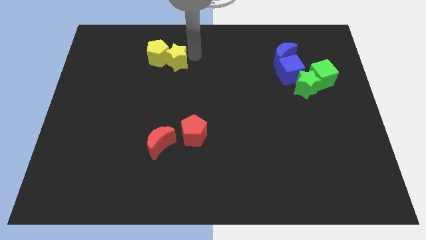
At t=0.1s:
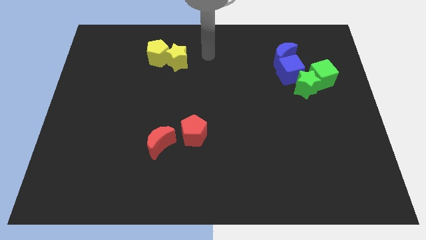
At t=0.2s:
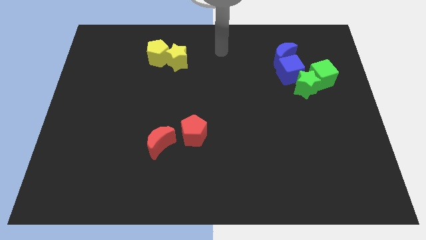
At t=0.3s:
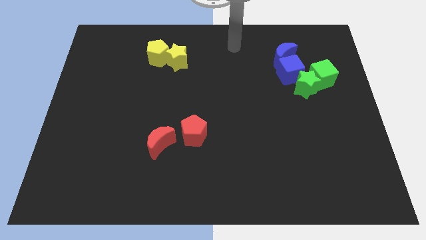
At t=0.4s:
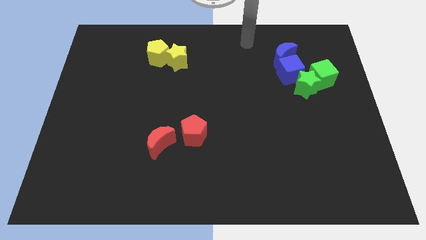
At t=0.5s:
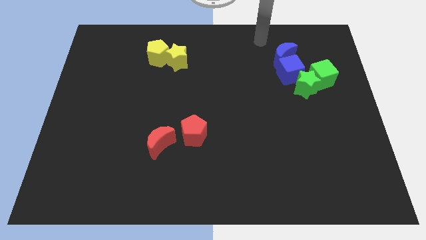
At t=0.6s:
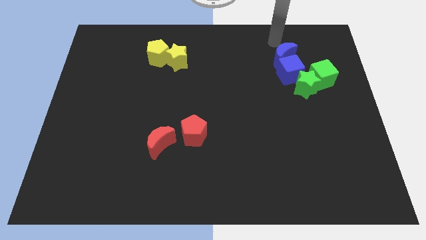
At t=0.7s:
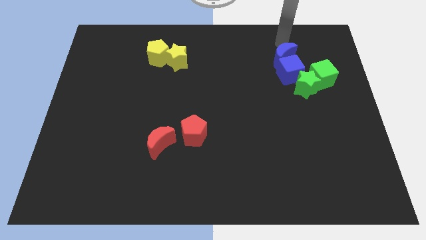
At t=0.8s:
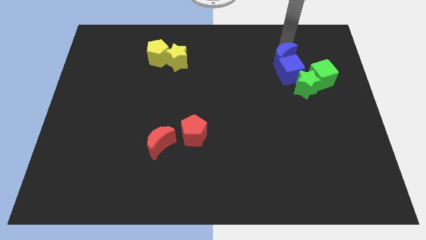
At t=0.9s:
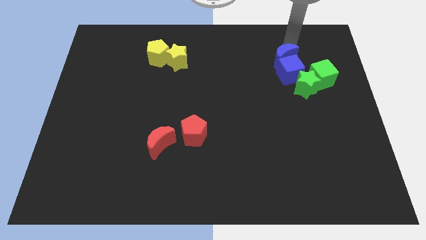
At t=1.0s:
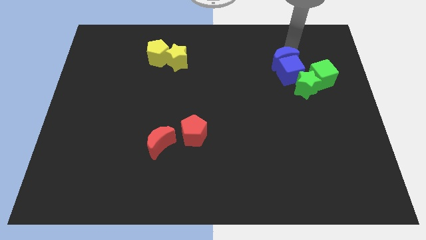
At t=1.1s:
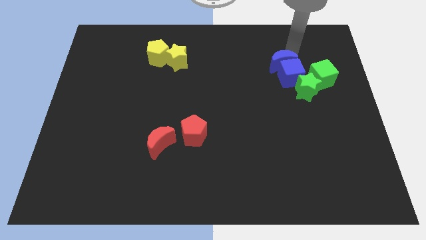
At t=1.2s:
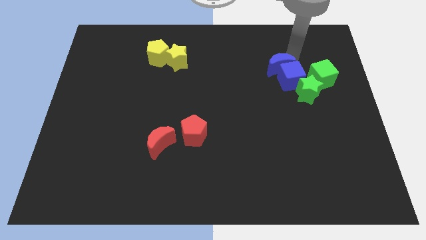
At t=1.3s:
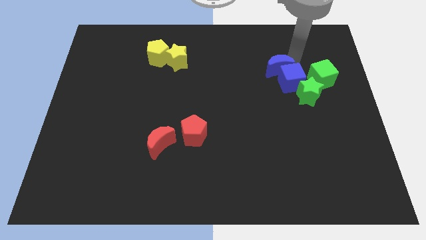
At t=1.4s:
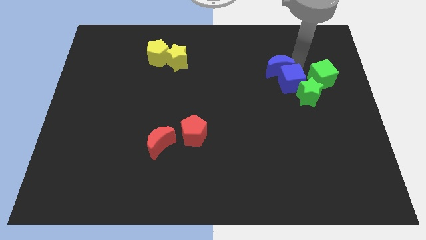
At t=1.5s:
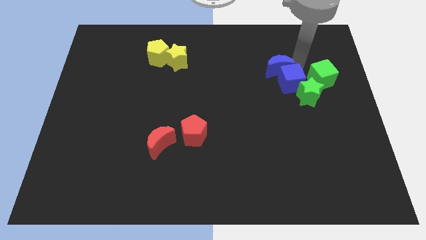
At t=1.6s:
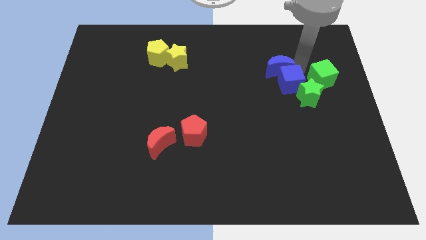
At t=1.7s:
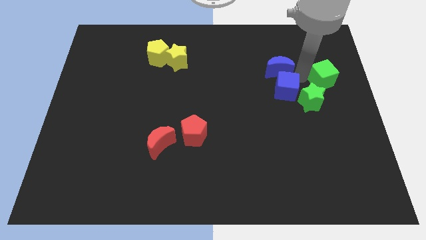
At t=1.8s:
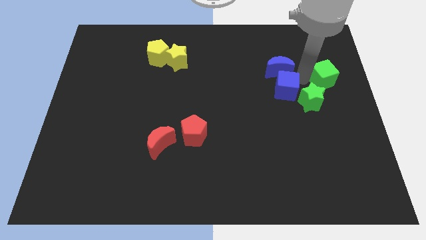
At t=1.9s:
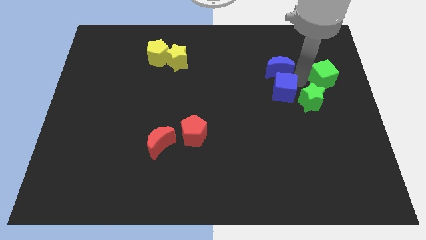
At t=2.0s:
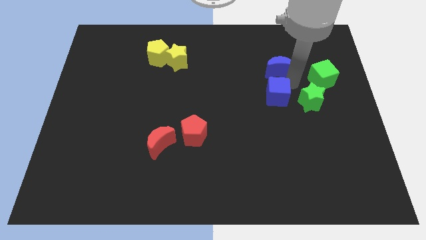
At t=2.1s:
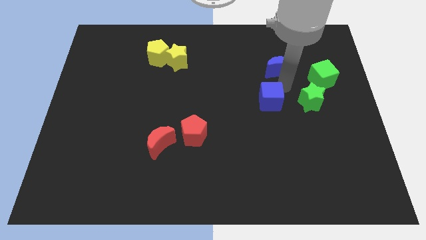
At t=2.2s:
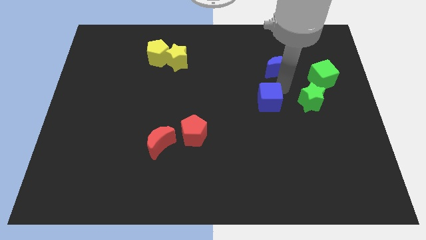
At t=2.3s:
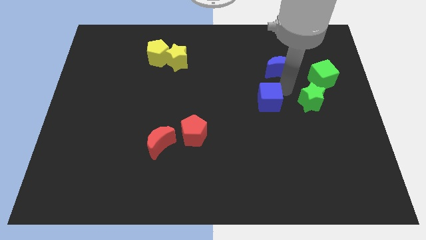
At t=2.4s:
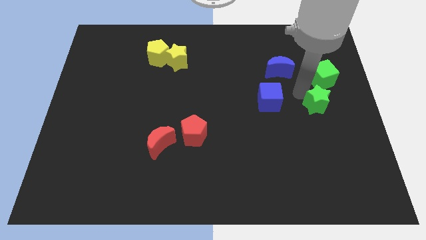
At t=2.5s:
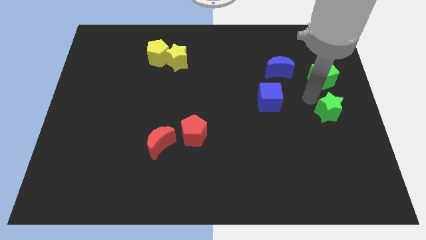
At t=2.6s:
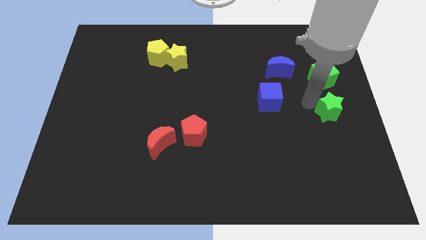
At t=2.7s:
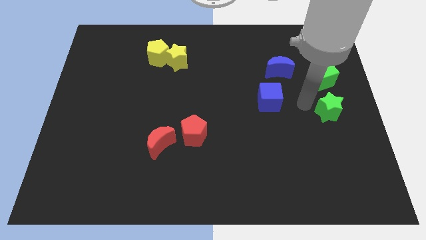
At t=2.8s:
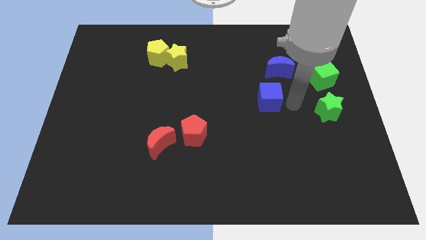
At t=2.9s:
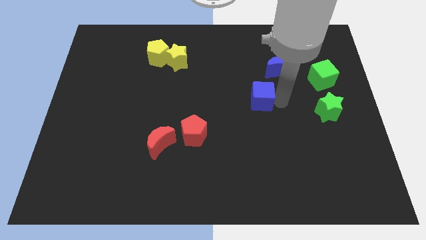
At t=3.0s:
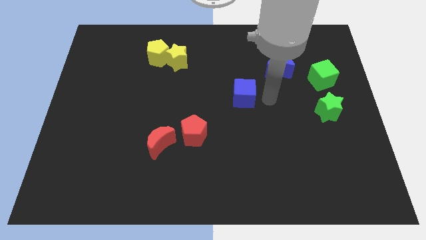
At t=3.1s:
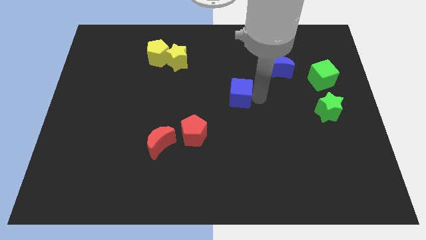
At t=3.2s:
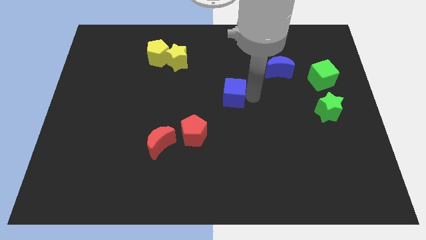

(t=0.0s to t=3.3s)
separate the blue cube from the blue crescent

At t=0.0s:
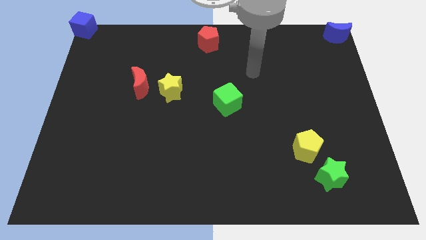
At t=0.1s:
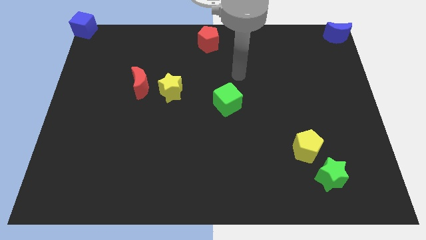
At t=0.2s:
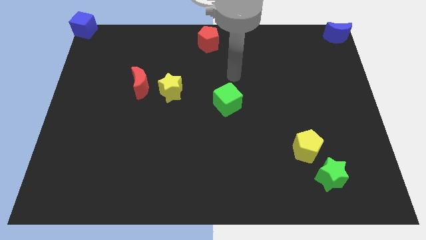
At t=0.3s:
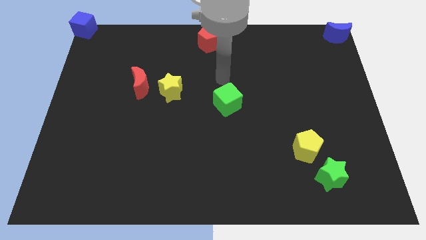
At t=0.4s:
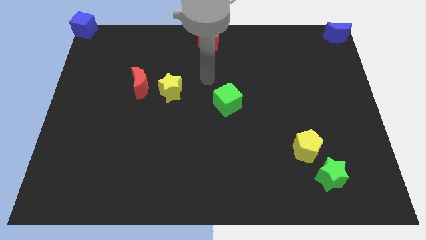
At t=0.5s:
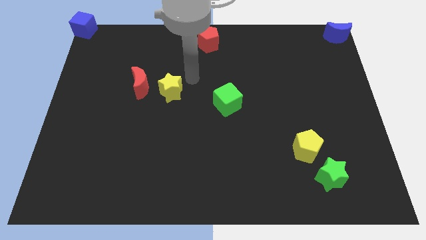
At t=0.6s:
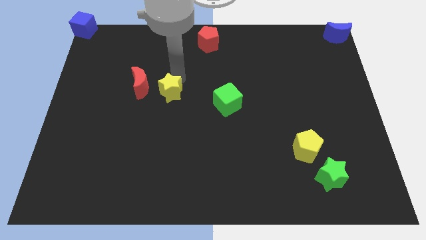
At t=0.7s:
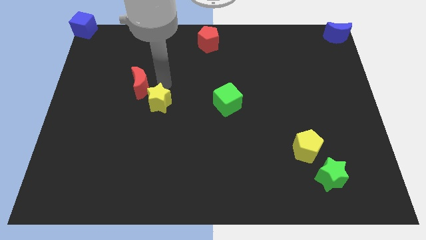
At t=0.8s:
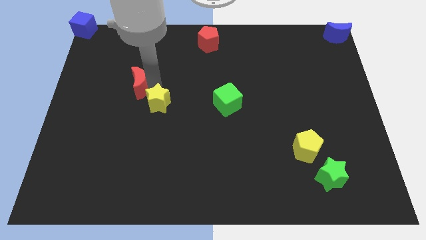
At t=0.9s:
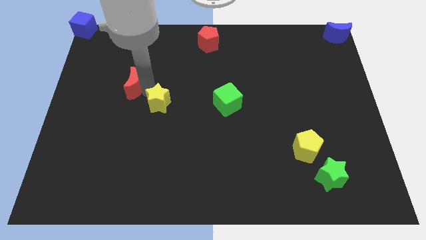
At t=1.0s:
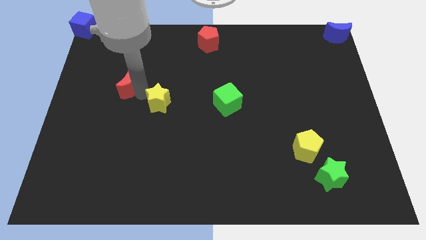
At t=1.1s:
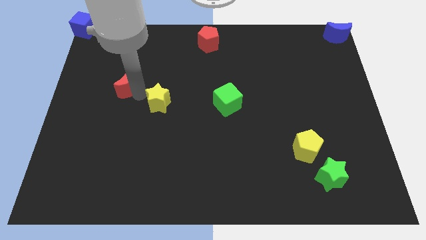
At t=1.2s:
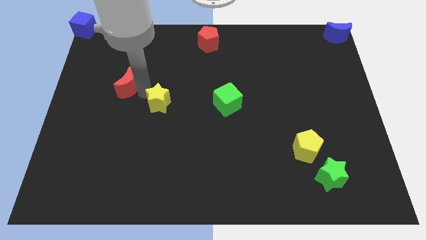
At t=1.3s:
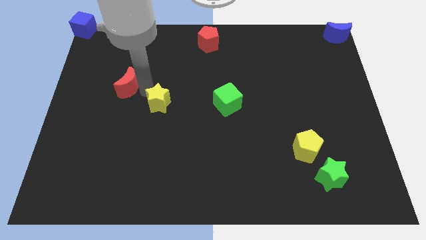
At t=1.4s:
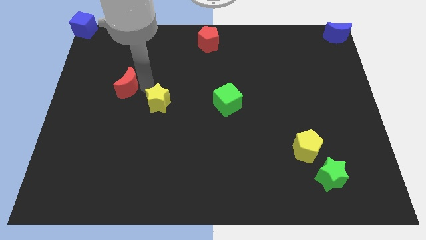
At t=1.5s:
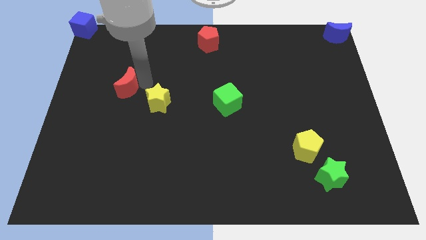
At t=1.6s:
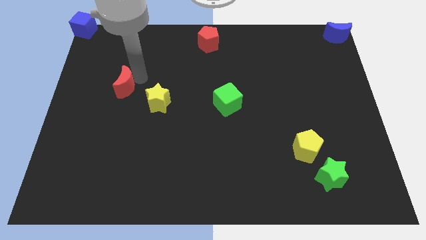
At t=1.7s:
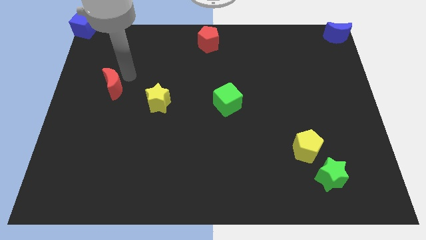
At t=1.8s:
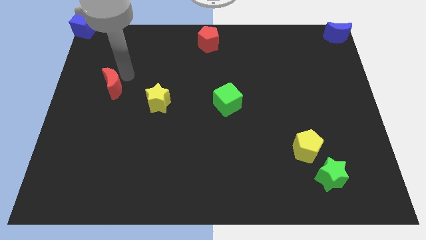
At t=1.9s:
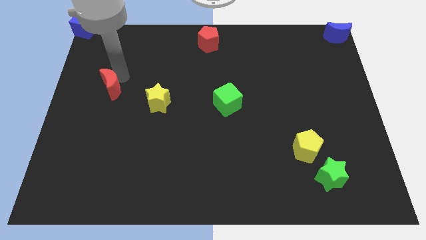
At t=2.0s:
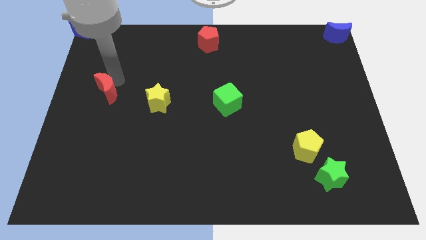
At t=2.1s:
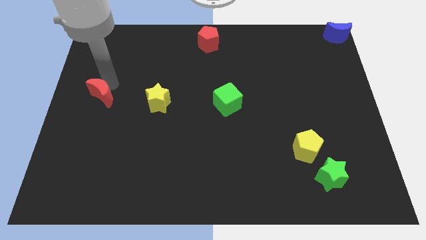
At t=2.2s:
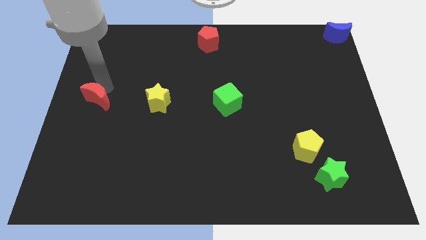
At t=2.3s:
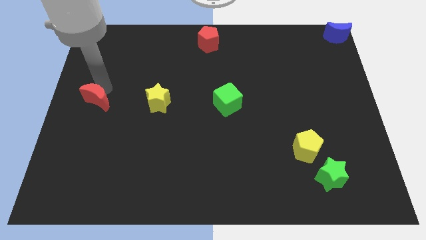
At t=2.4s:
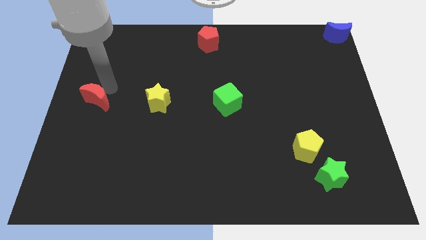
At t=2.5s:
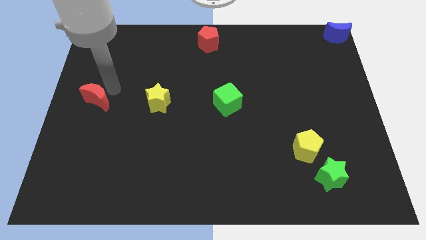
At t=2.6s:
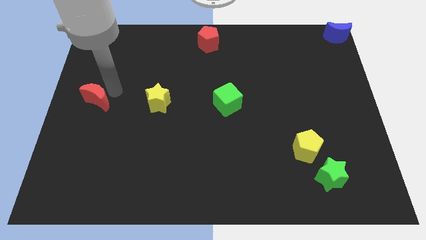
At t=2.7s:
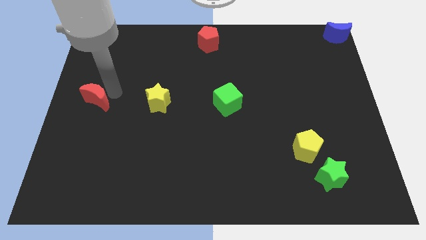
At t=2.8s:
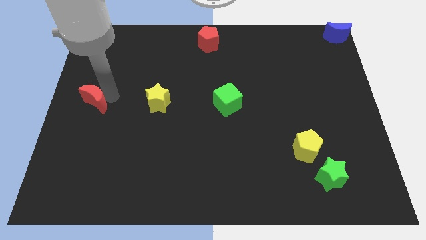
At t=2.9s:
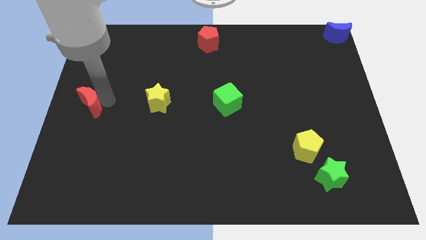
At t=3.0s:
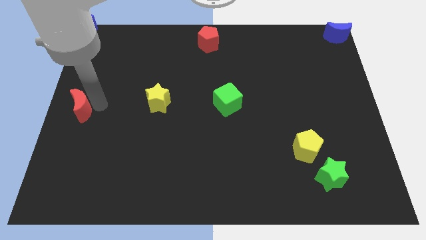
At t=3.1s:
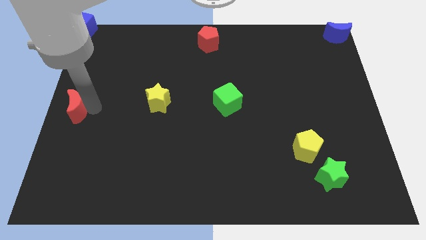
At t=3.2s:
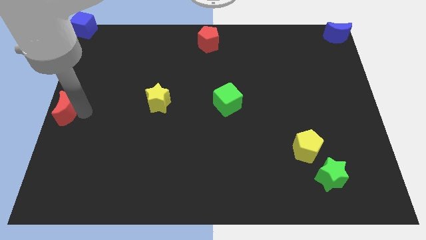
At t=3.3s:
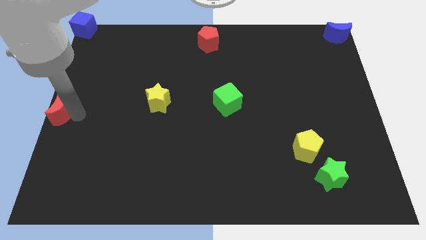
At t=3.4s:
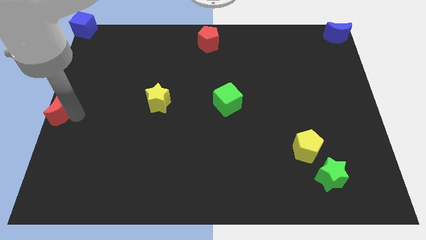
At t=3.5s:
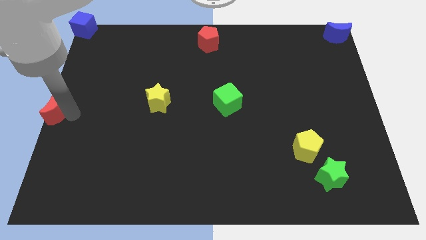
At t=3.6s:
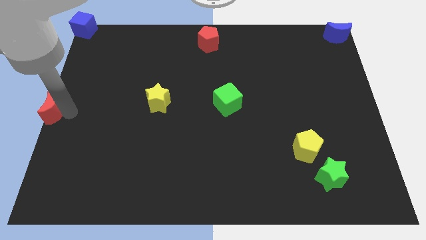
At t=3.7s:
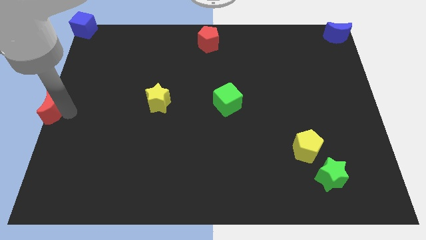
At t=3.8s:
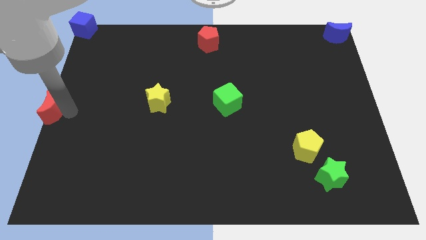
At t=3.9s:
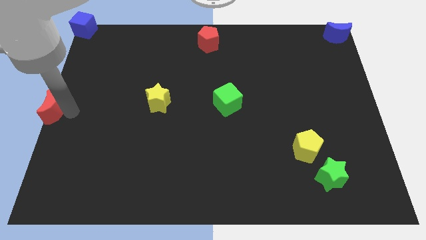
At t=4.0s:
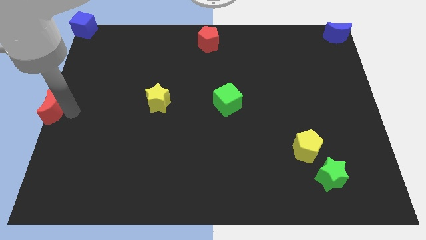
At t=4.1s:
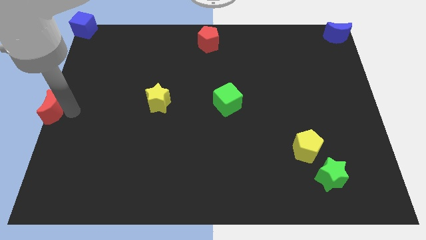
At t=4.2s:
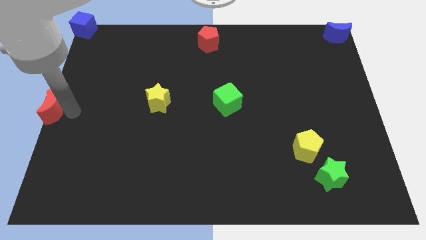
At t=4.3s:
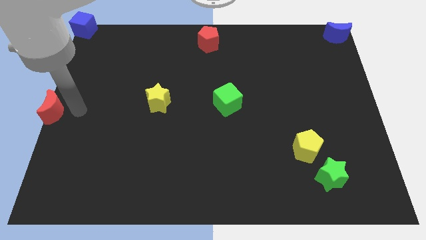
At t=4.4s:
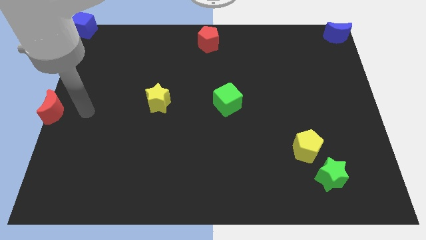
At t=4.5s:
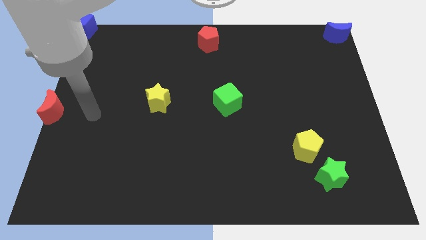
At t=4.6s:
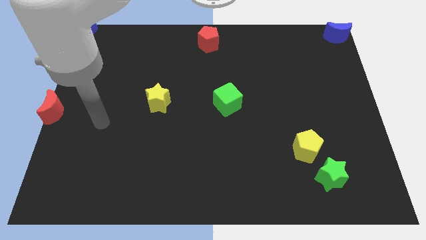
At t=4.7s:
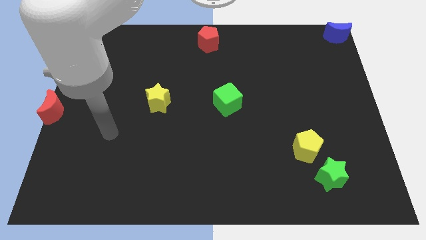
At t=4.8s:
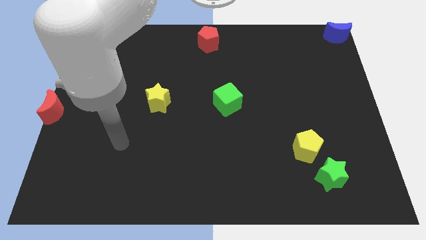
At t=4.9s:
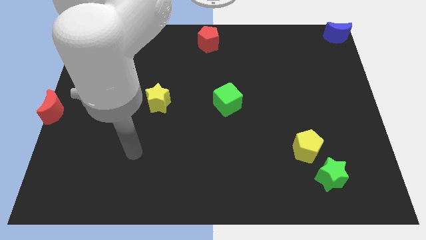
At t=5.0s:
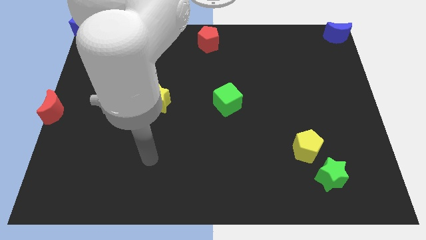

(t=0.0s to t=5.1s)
move red moon center left of the board

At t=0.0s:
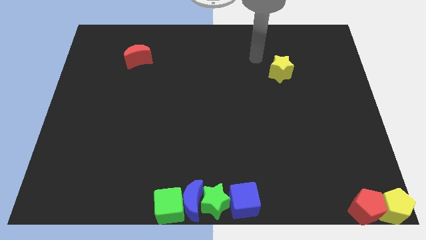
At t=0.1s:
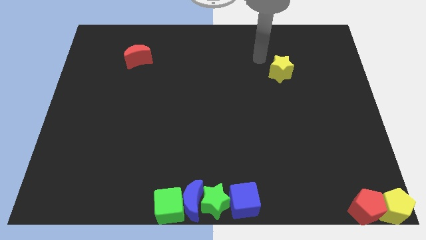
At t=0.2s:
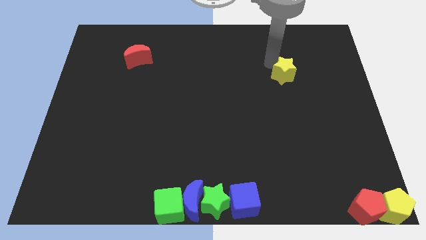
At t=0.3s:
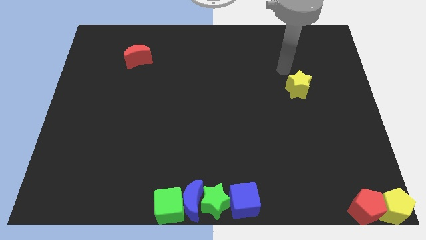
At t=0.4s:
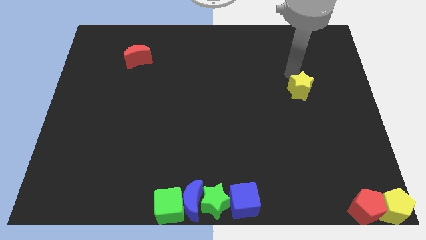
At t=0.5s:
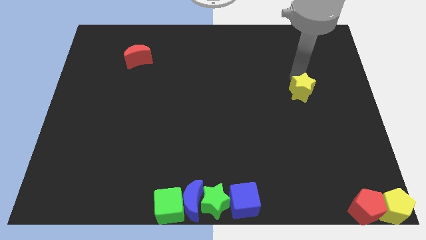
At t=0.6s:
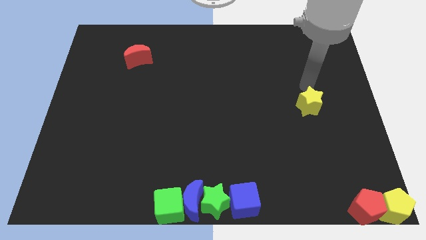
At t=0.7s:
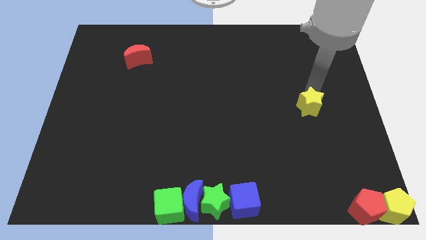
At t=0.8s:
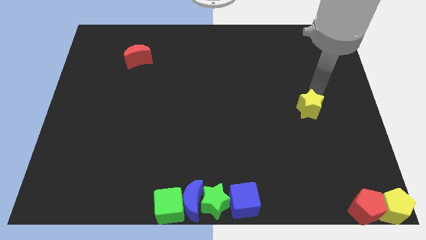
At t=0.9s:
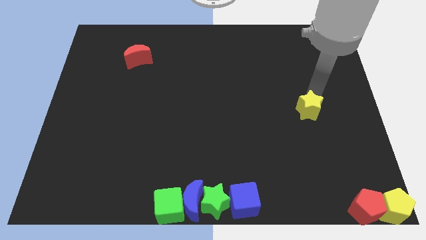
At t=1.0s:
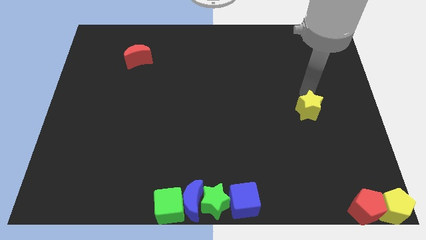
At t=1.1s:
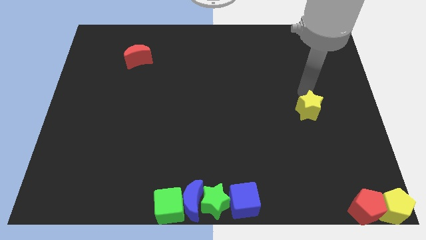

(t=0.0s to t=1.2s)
push the yellow star to the bottom of the board
